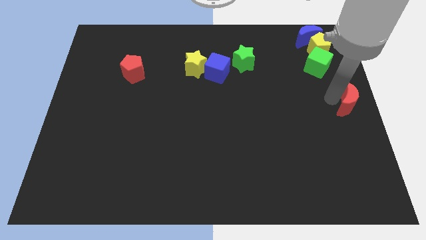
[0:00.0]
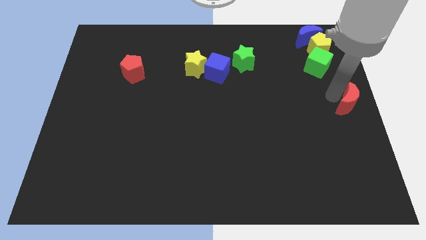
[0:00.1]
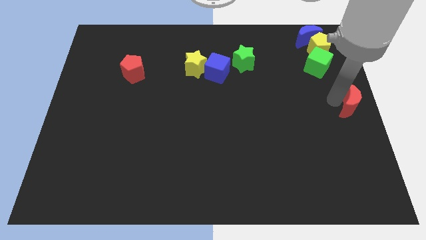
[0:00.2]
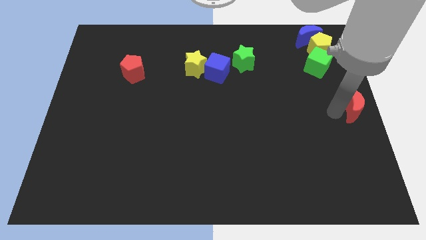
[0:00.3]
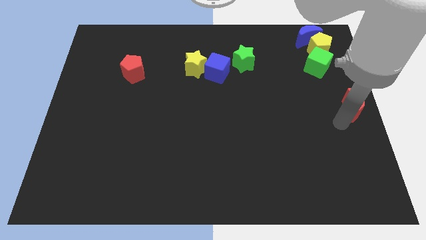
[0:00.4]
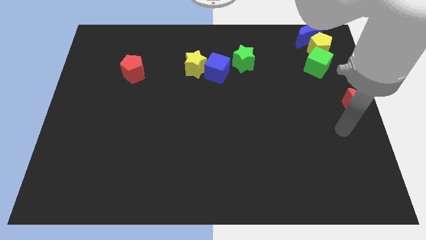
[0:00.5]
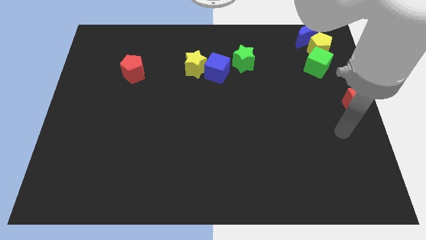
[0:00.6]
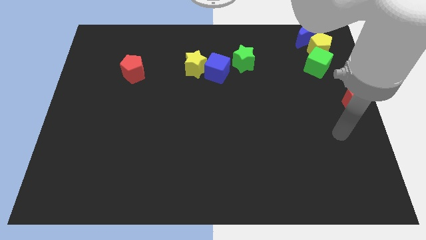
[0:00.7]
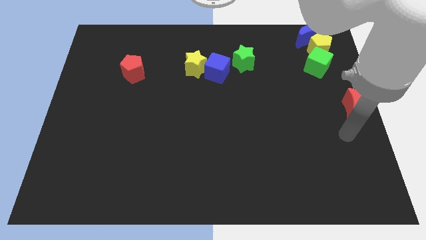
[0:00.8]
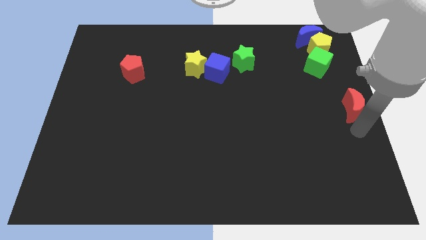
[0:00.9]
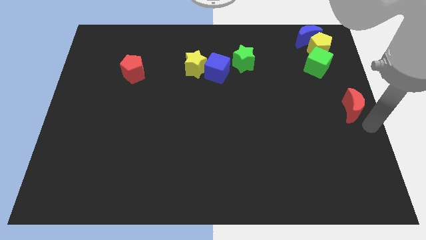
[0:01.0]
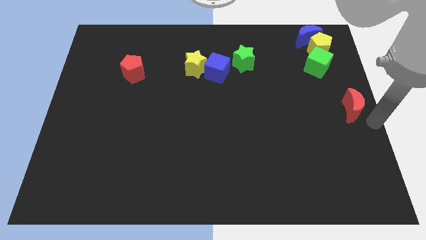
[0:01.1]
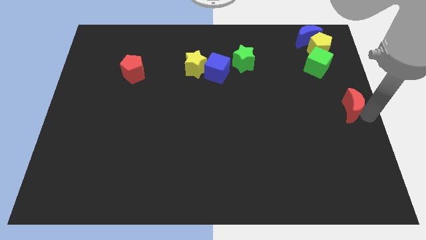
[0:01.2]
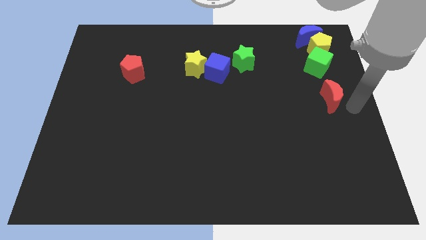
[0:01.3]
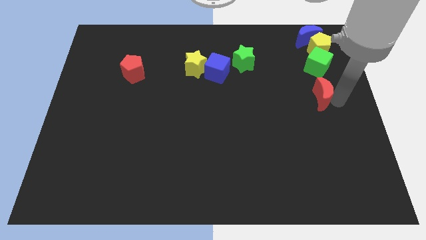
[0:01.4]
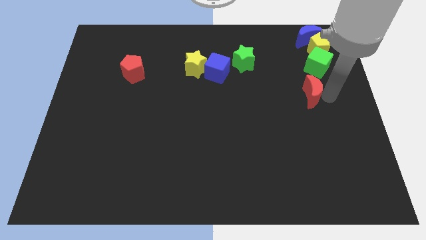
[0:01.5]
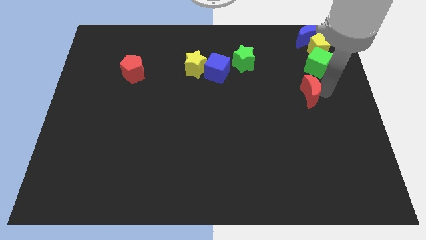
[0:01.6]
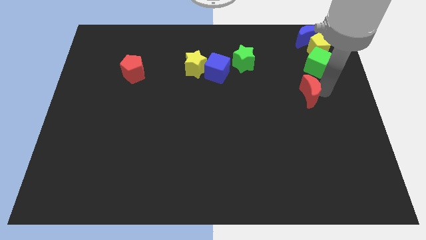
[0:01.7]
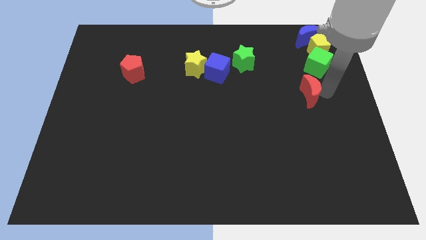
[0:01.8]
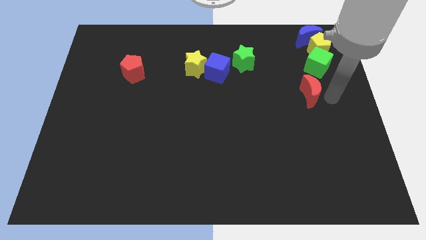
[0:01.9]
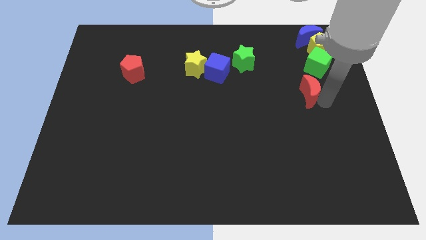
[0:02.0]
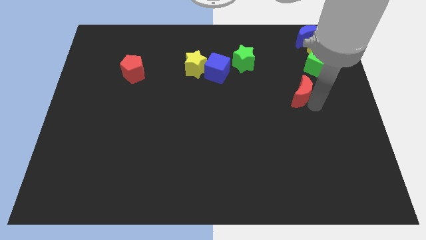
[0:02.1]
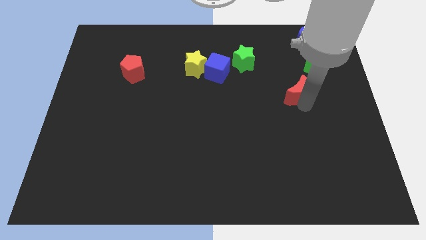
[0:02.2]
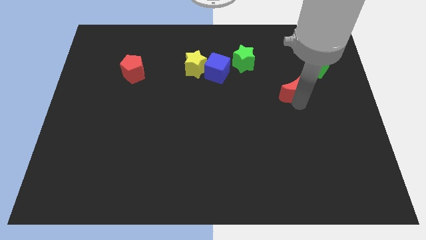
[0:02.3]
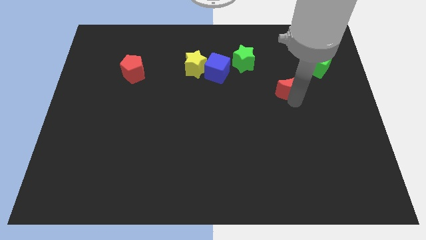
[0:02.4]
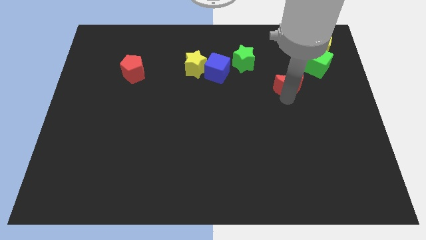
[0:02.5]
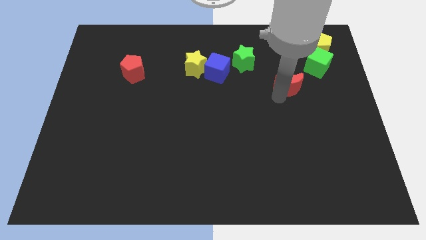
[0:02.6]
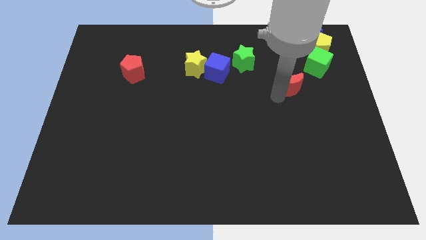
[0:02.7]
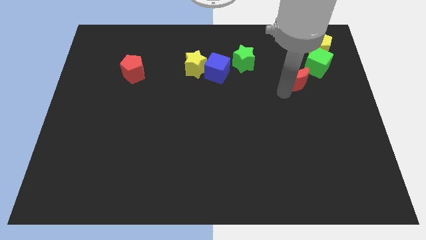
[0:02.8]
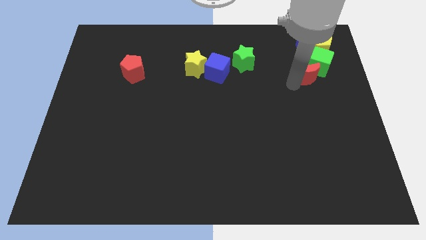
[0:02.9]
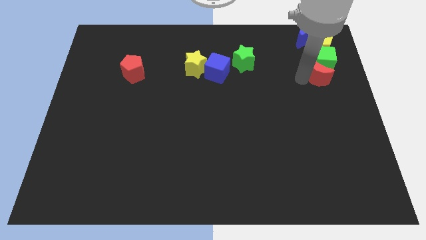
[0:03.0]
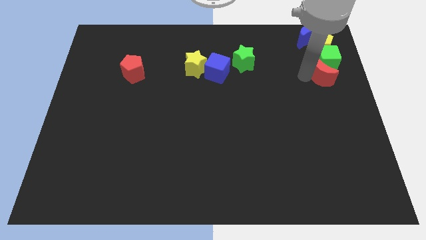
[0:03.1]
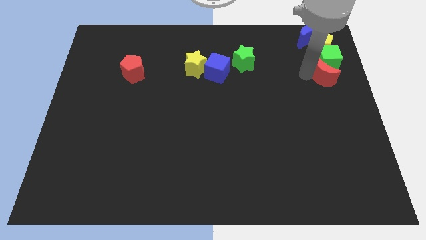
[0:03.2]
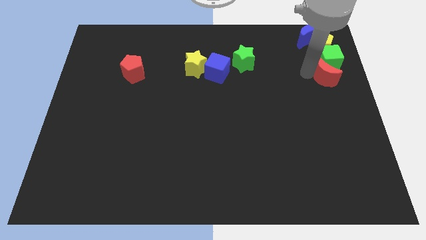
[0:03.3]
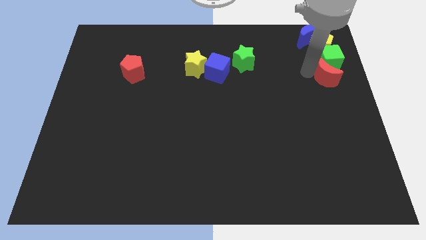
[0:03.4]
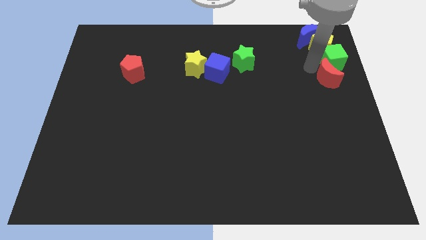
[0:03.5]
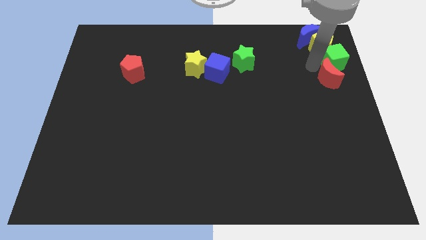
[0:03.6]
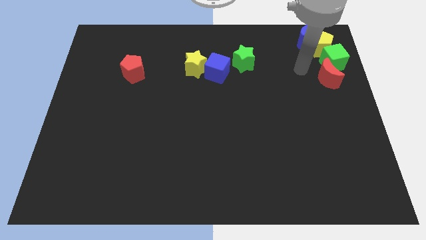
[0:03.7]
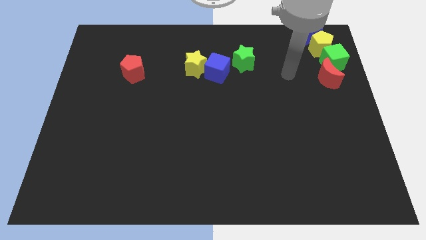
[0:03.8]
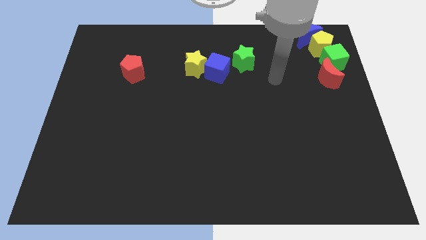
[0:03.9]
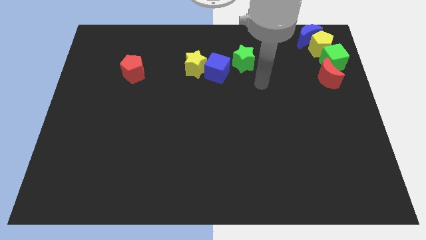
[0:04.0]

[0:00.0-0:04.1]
push red moon into the green cube

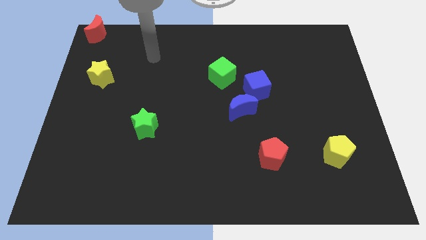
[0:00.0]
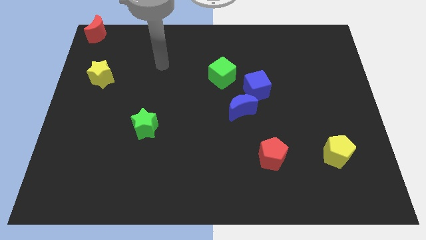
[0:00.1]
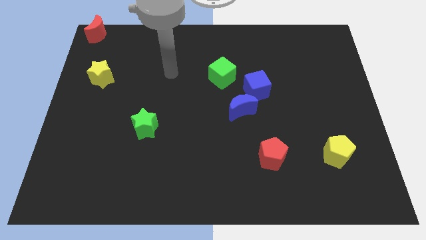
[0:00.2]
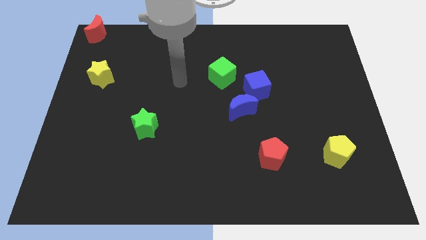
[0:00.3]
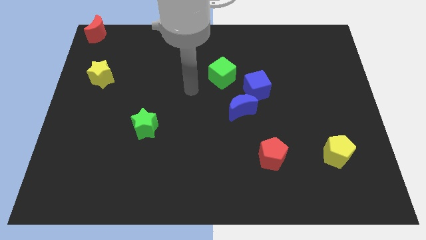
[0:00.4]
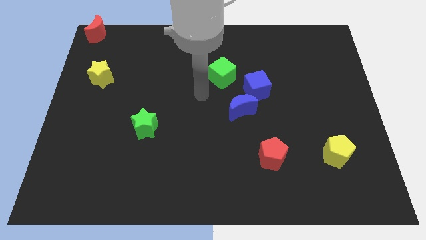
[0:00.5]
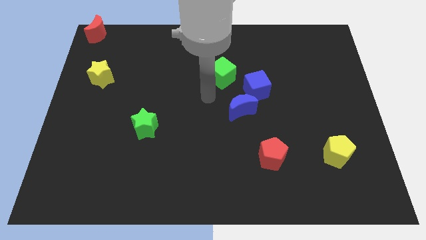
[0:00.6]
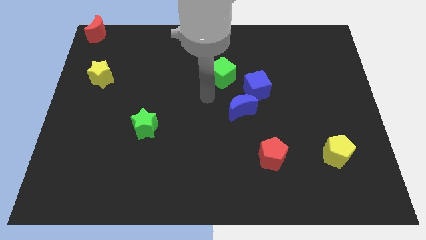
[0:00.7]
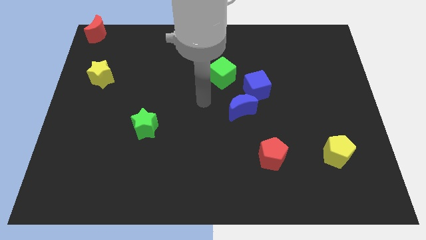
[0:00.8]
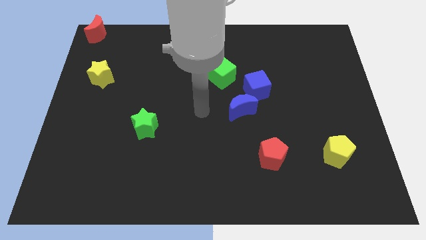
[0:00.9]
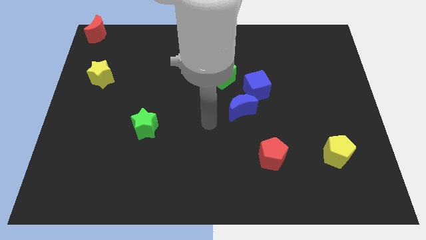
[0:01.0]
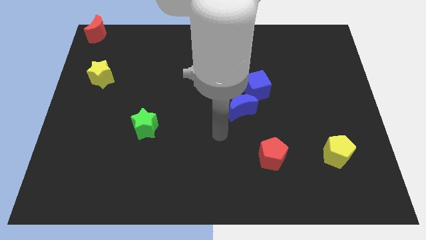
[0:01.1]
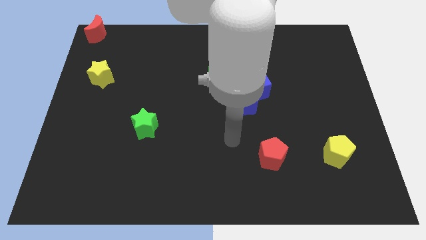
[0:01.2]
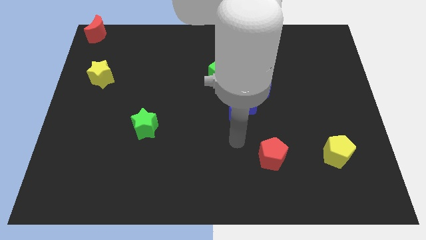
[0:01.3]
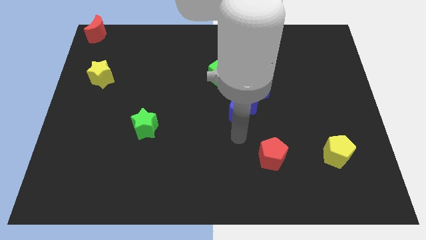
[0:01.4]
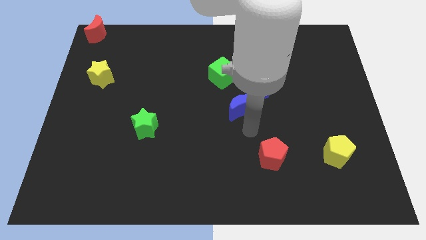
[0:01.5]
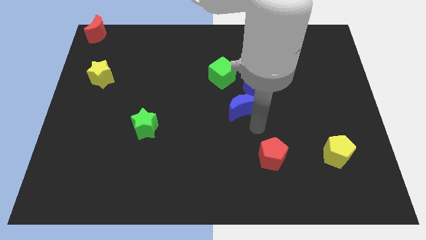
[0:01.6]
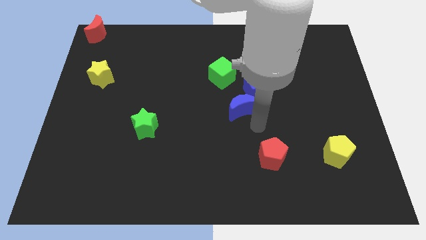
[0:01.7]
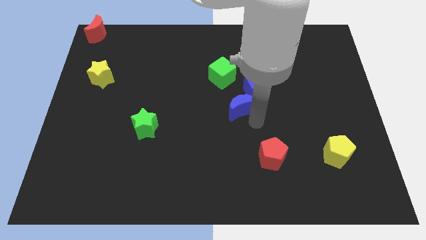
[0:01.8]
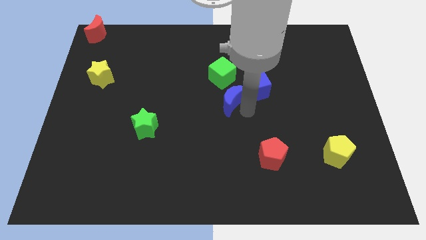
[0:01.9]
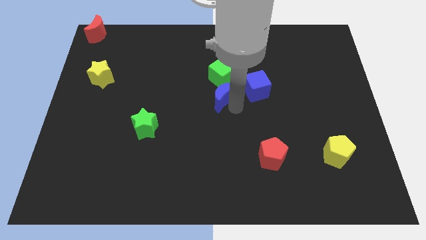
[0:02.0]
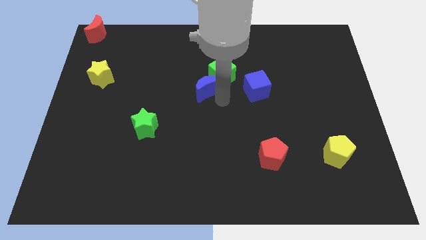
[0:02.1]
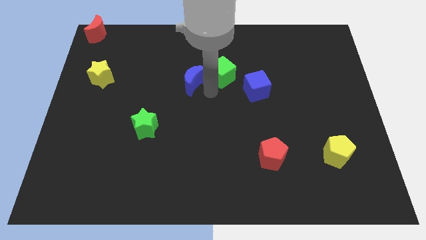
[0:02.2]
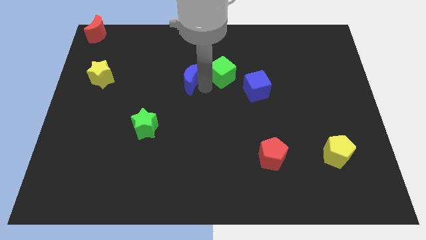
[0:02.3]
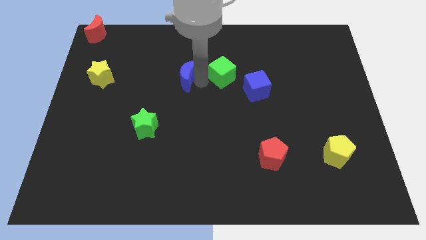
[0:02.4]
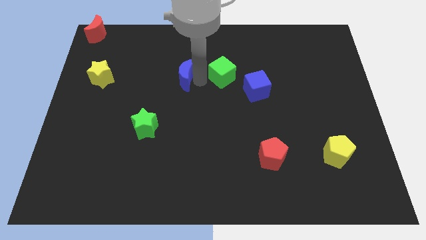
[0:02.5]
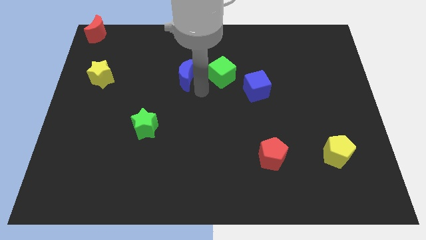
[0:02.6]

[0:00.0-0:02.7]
push blue moon upwards

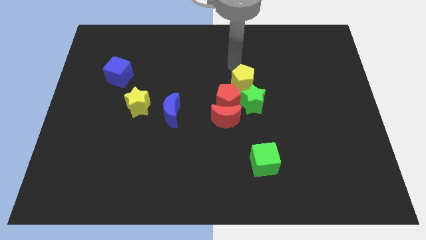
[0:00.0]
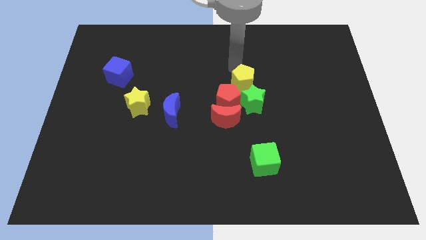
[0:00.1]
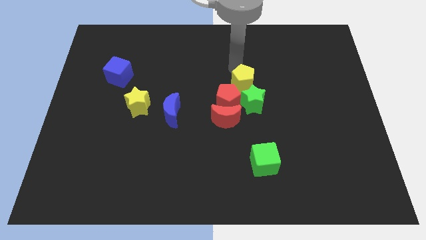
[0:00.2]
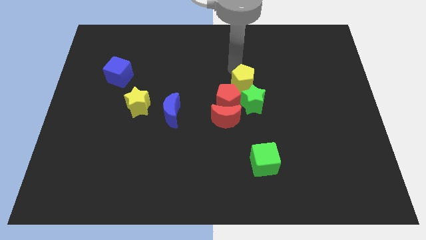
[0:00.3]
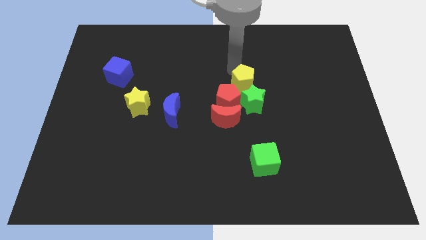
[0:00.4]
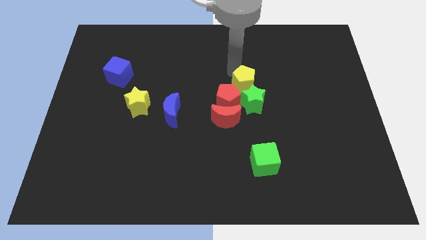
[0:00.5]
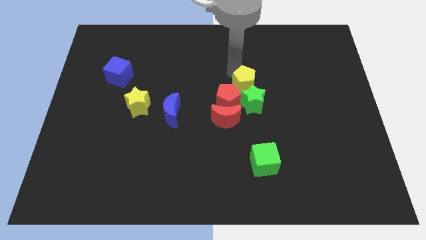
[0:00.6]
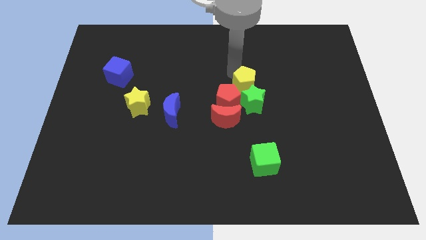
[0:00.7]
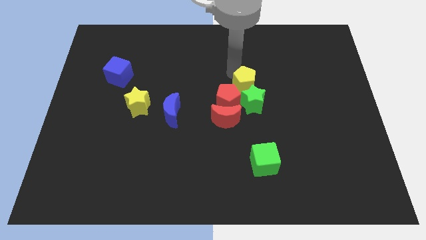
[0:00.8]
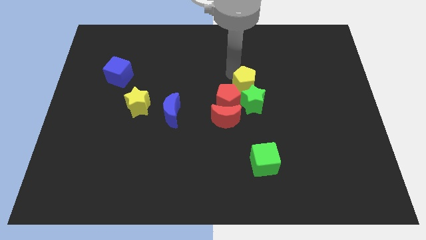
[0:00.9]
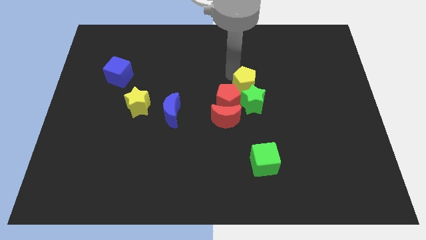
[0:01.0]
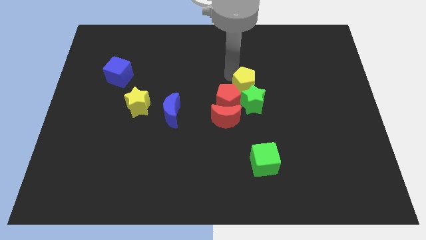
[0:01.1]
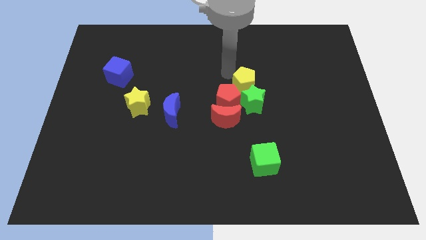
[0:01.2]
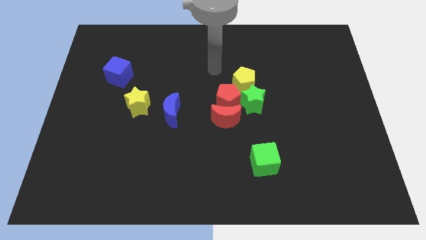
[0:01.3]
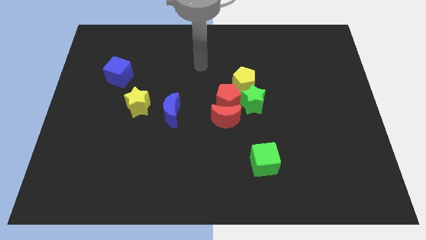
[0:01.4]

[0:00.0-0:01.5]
move the yellow pentagon near to the green star

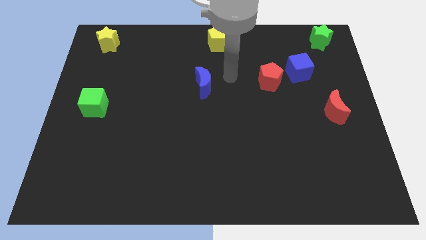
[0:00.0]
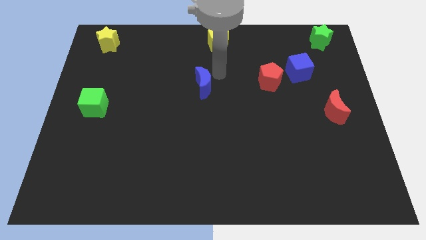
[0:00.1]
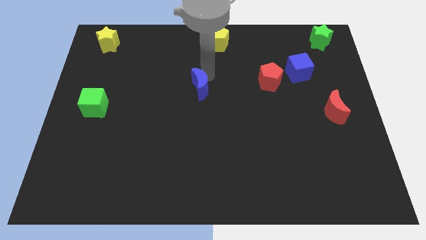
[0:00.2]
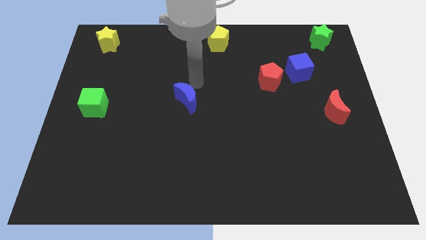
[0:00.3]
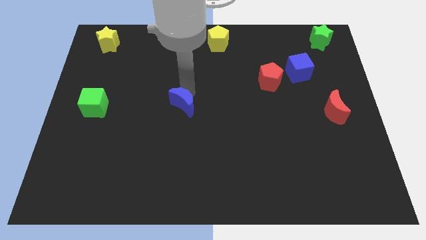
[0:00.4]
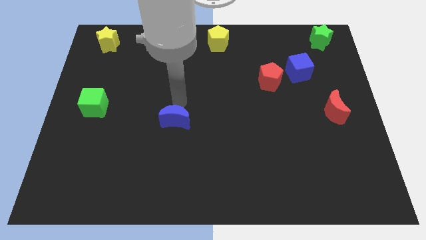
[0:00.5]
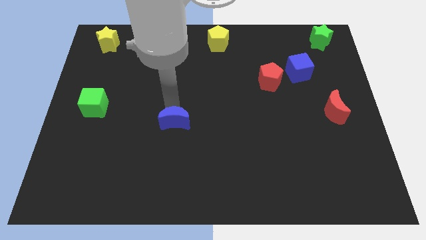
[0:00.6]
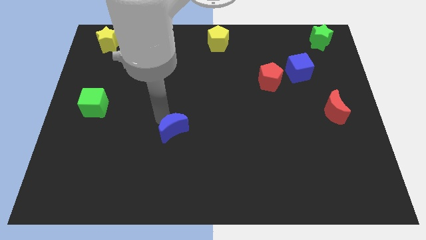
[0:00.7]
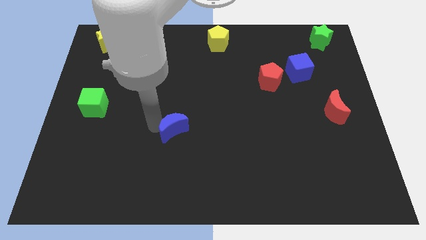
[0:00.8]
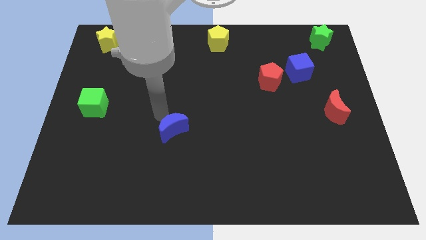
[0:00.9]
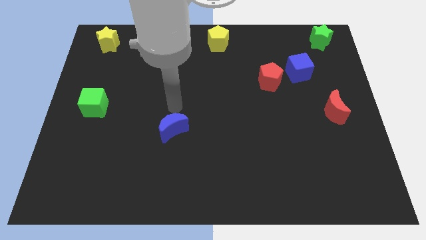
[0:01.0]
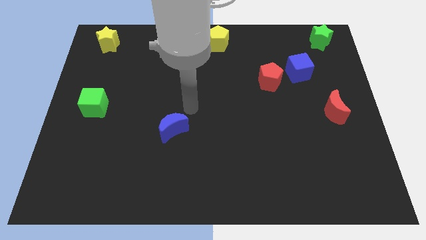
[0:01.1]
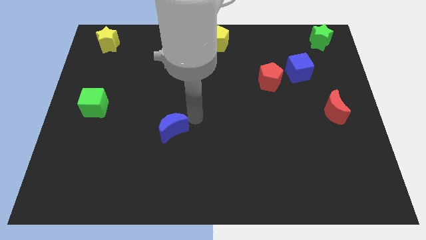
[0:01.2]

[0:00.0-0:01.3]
slide the blue crescent slightly towards down
